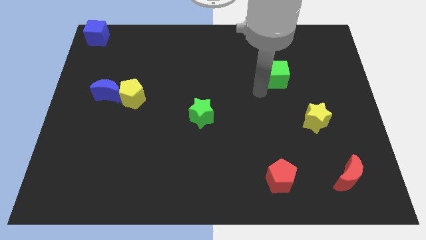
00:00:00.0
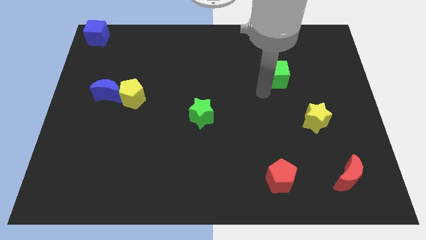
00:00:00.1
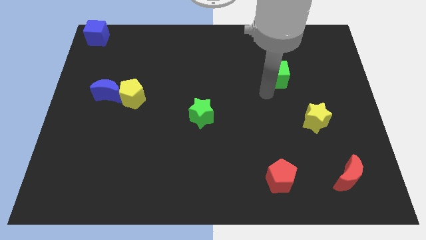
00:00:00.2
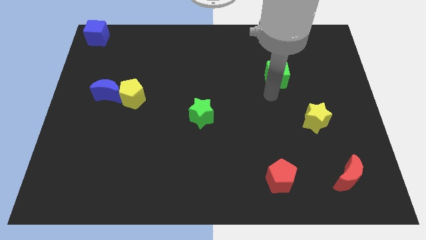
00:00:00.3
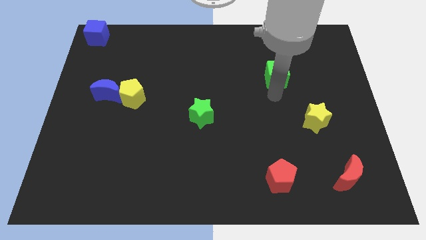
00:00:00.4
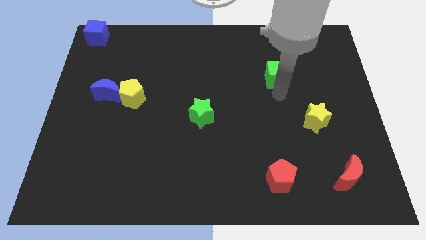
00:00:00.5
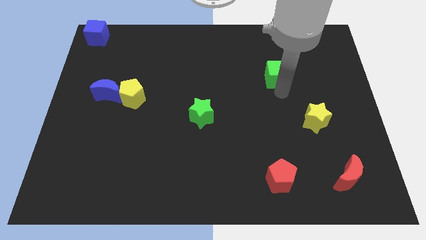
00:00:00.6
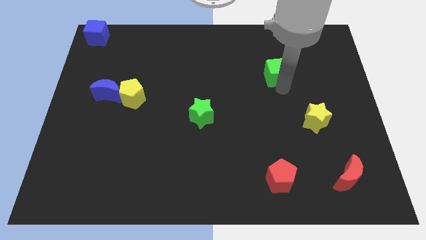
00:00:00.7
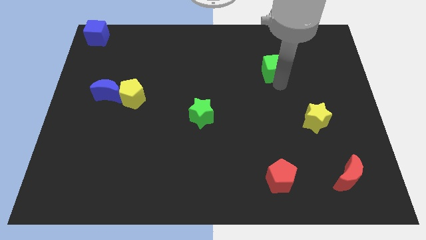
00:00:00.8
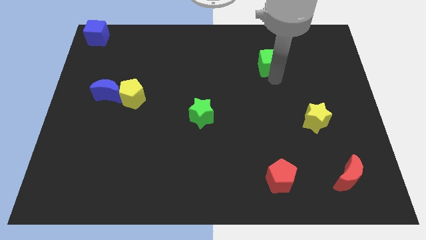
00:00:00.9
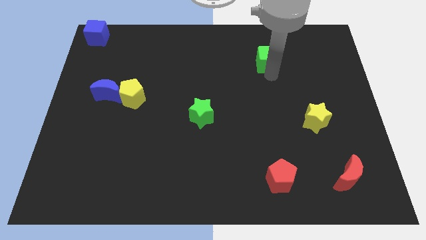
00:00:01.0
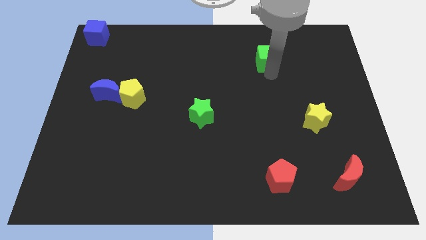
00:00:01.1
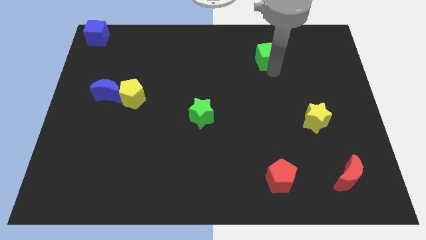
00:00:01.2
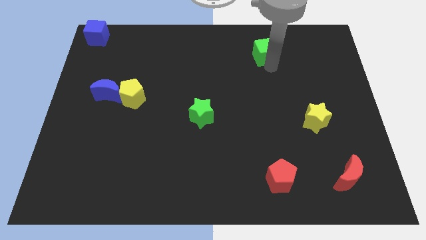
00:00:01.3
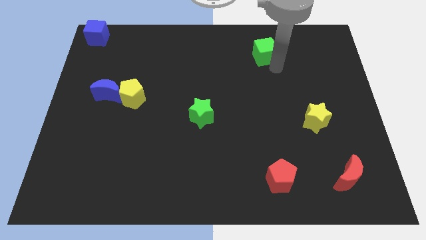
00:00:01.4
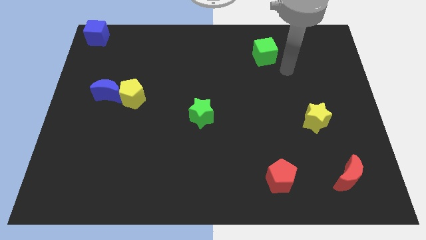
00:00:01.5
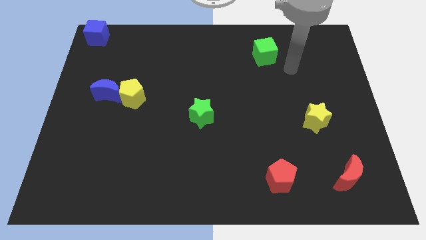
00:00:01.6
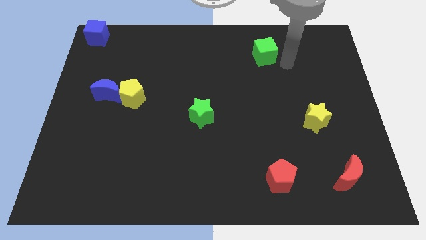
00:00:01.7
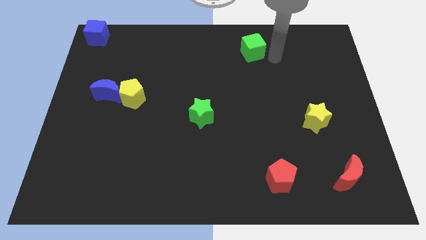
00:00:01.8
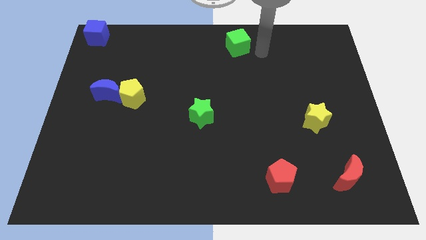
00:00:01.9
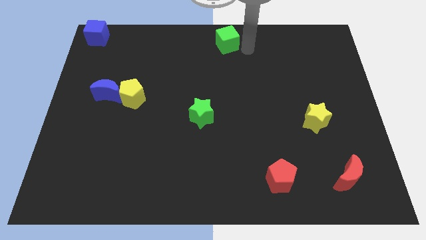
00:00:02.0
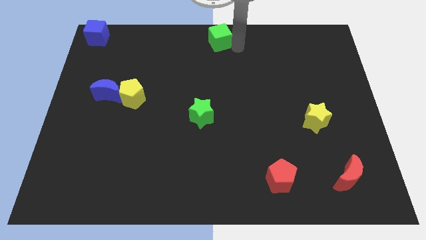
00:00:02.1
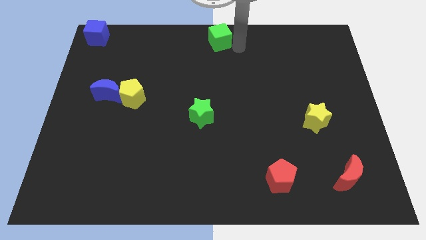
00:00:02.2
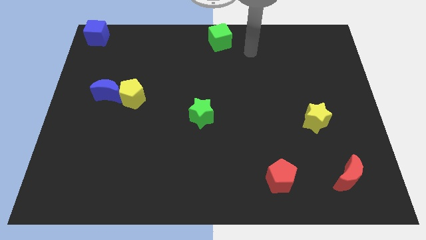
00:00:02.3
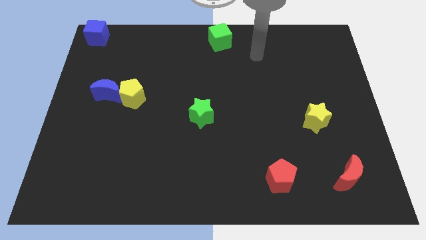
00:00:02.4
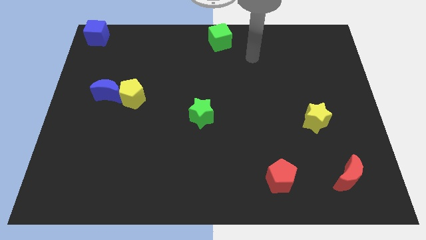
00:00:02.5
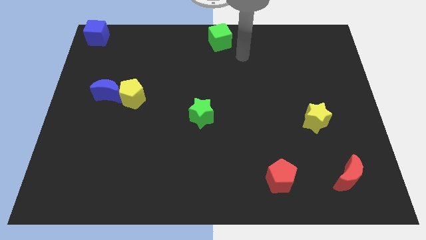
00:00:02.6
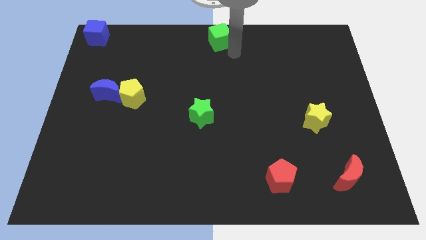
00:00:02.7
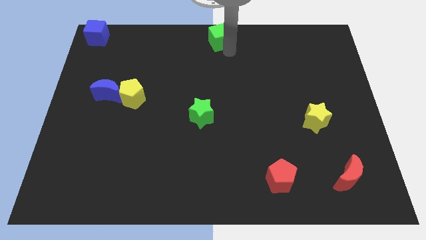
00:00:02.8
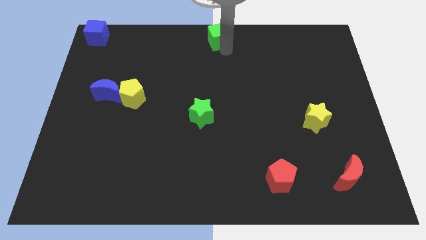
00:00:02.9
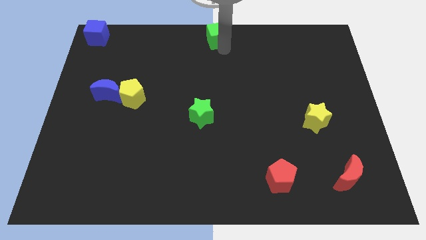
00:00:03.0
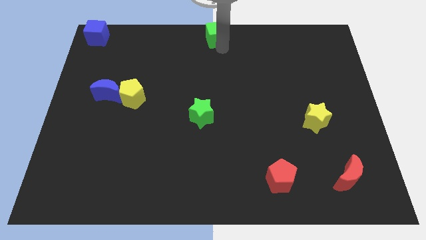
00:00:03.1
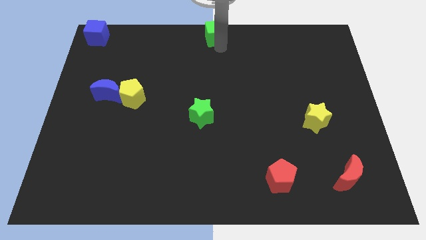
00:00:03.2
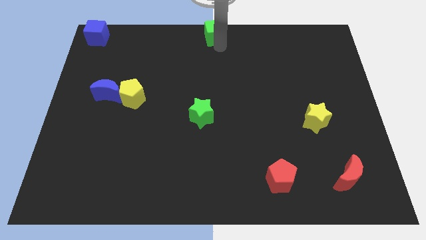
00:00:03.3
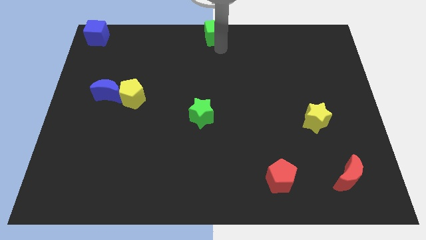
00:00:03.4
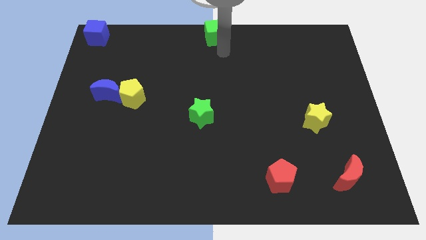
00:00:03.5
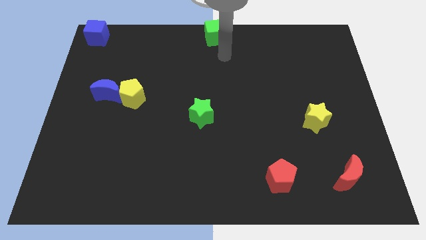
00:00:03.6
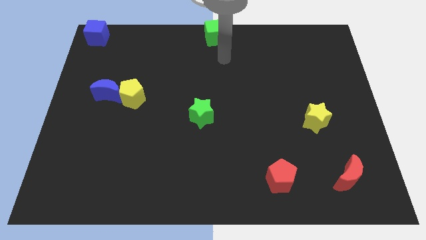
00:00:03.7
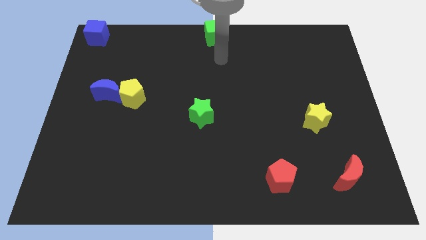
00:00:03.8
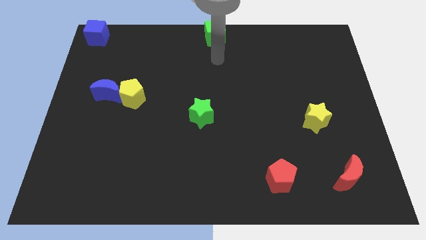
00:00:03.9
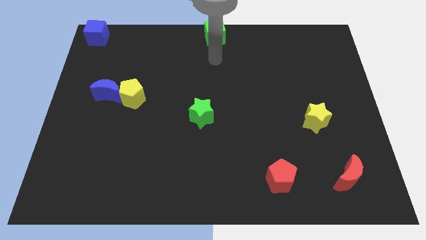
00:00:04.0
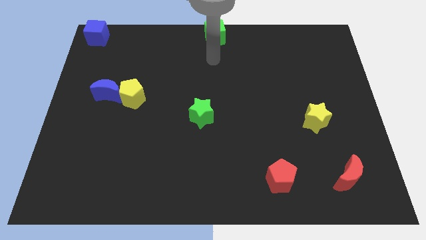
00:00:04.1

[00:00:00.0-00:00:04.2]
push the green cube to the top center of the board

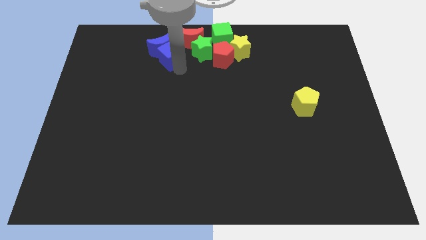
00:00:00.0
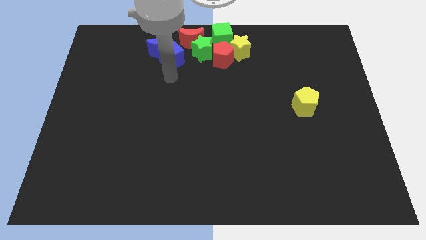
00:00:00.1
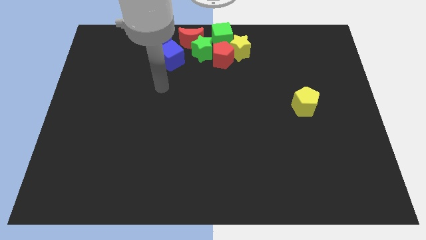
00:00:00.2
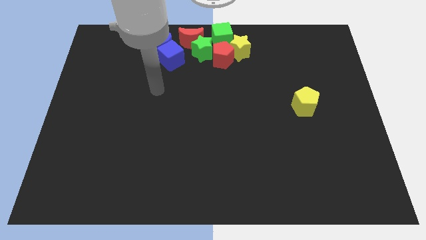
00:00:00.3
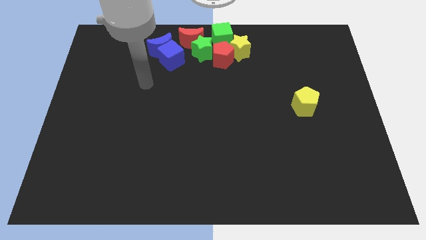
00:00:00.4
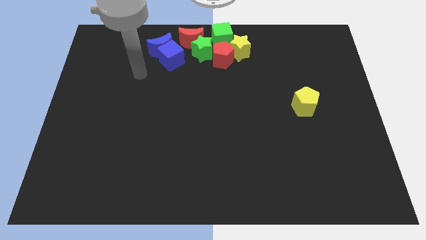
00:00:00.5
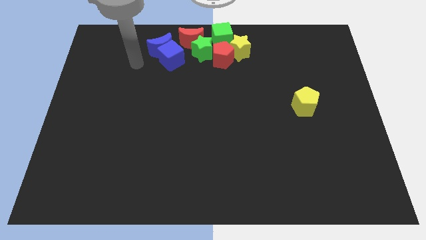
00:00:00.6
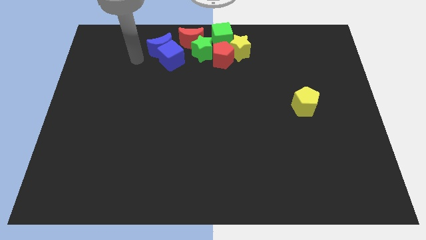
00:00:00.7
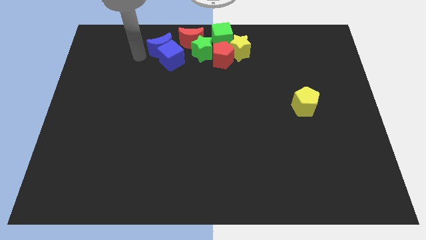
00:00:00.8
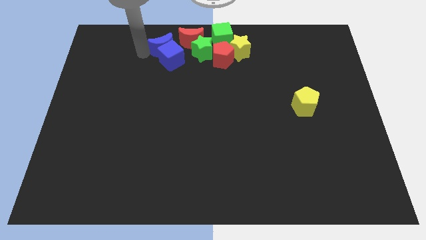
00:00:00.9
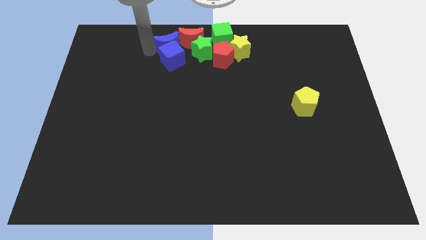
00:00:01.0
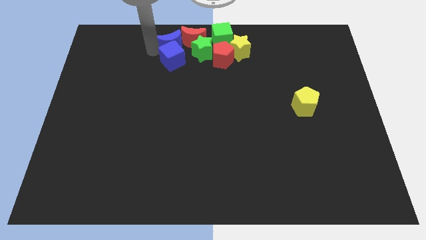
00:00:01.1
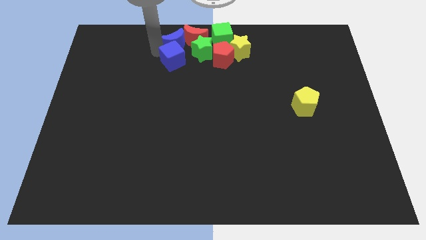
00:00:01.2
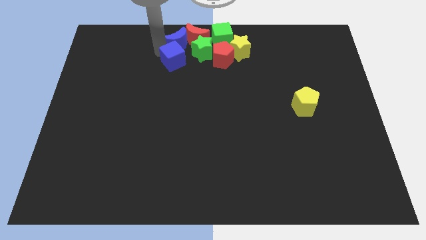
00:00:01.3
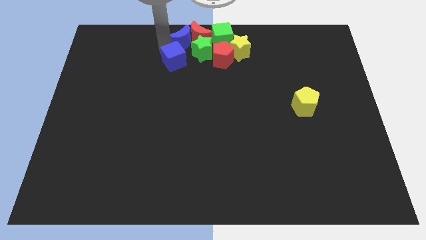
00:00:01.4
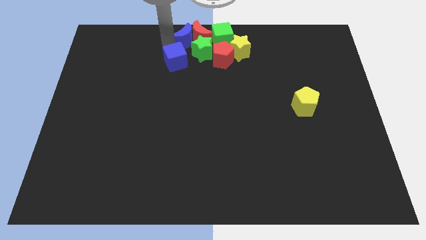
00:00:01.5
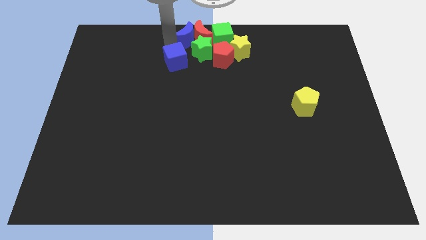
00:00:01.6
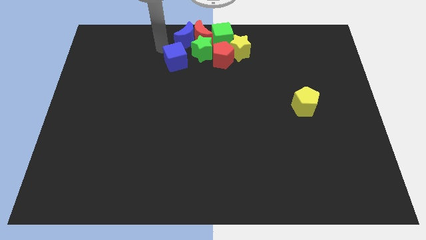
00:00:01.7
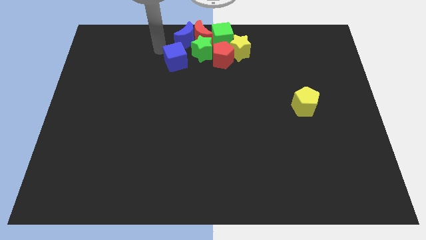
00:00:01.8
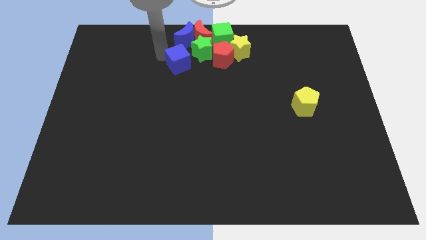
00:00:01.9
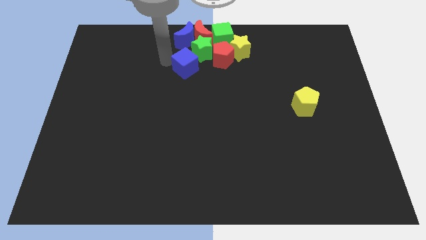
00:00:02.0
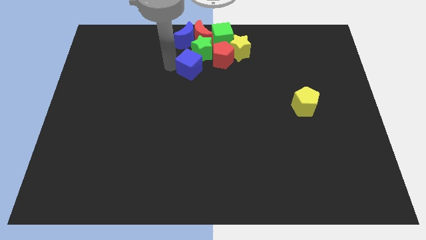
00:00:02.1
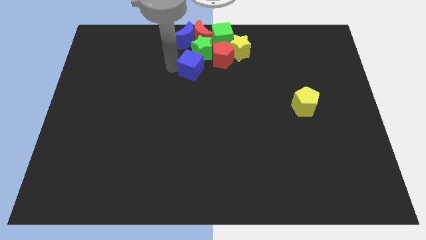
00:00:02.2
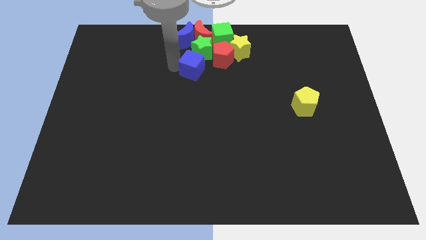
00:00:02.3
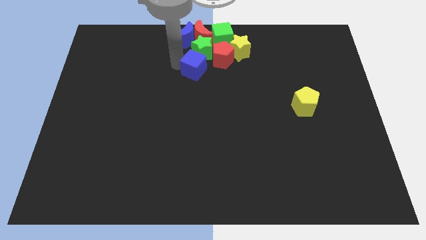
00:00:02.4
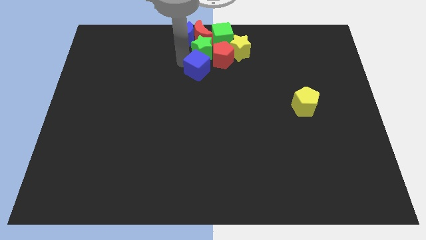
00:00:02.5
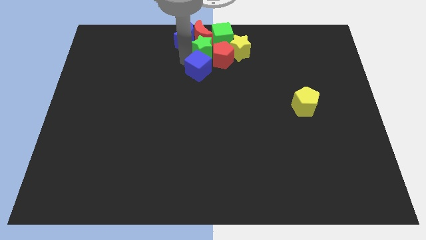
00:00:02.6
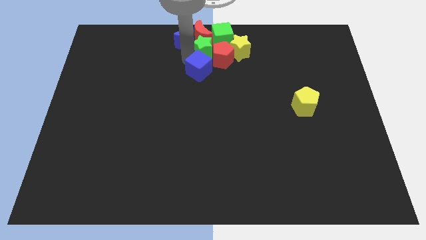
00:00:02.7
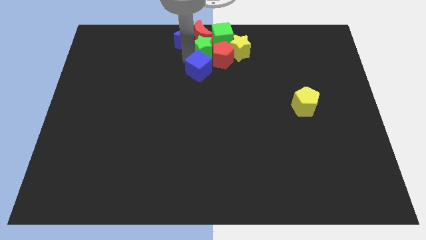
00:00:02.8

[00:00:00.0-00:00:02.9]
place the blue cube down to the green star

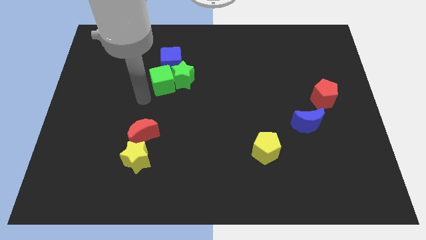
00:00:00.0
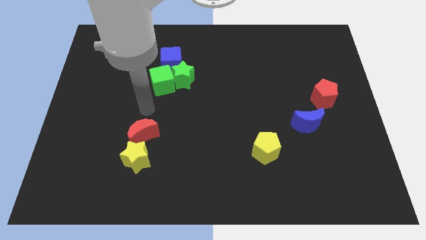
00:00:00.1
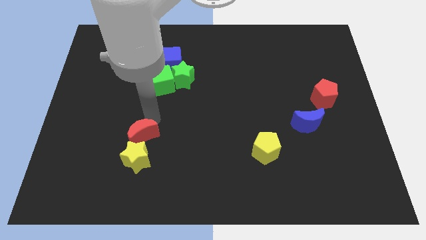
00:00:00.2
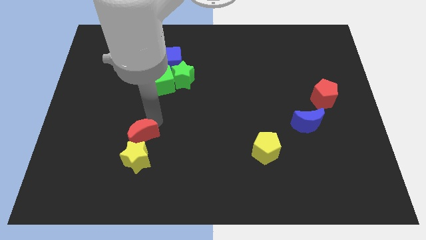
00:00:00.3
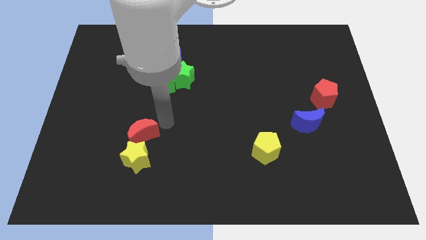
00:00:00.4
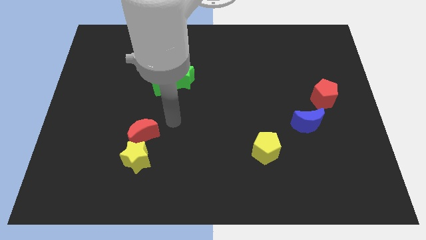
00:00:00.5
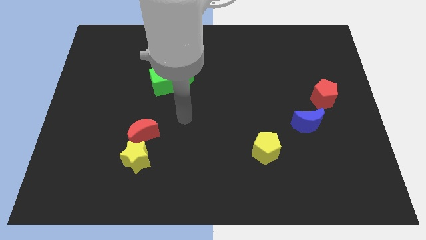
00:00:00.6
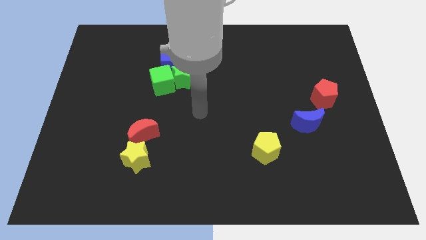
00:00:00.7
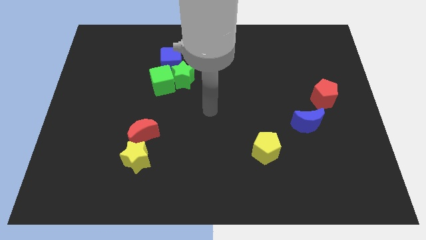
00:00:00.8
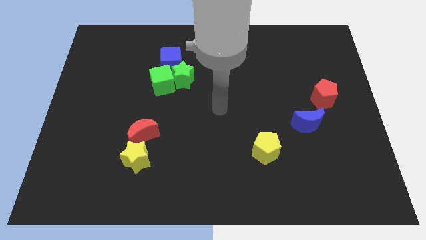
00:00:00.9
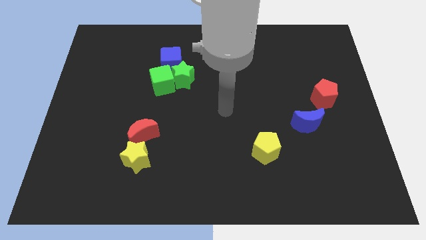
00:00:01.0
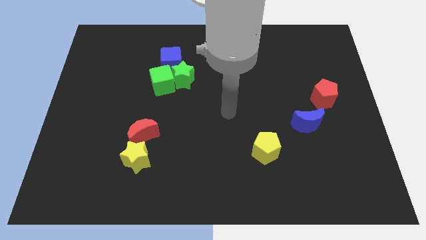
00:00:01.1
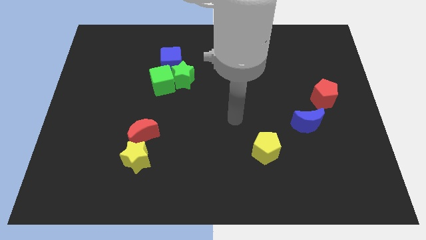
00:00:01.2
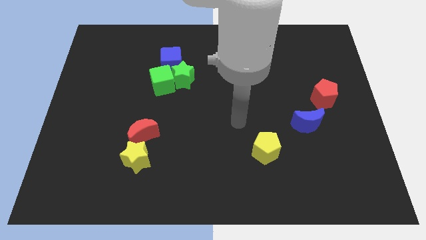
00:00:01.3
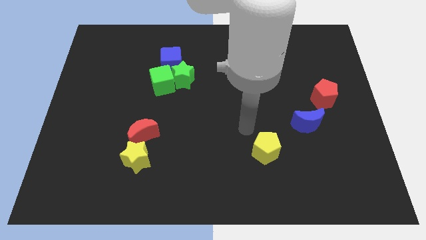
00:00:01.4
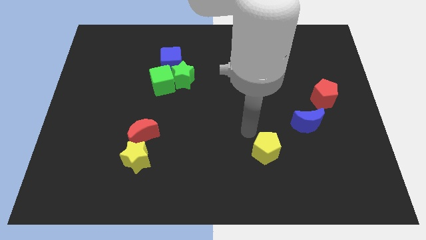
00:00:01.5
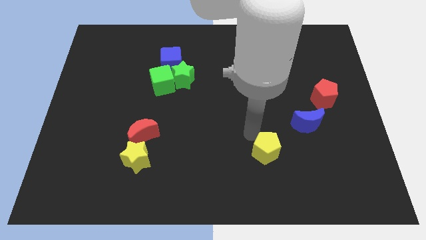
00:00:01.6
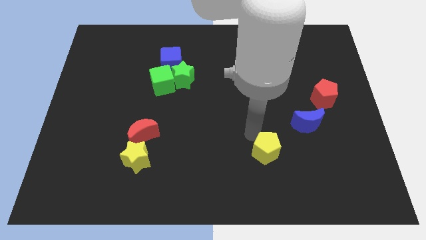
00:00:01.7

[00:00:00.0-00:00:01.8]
place the arm on the top left of the yellow pentagon
